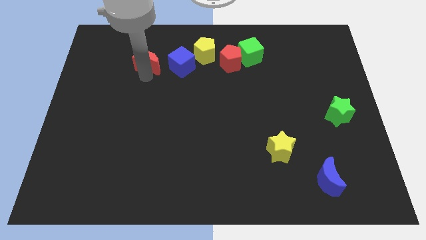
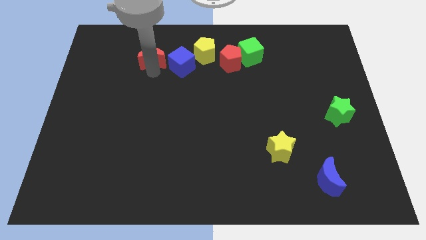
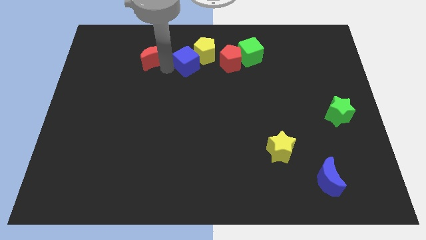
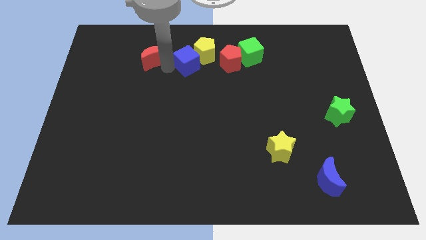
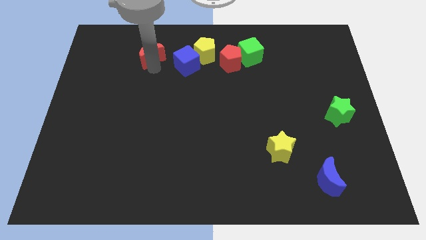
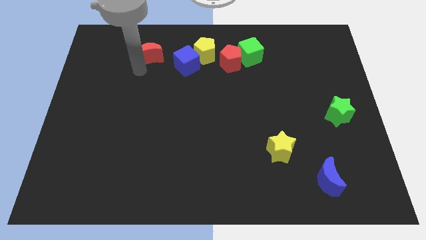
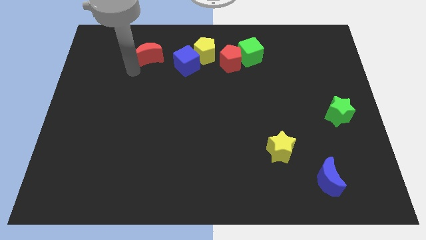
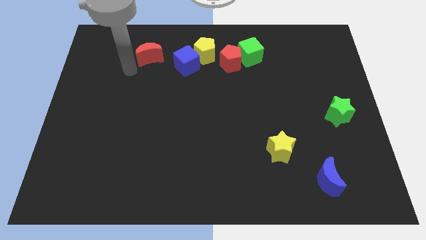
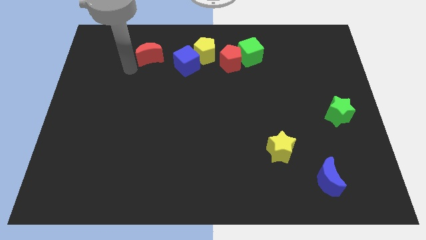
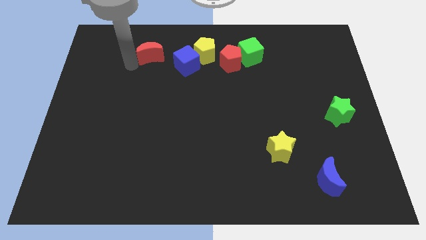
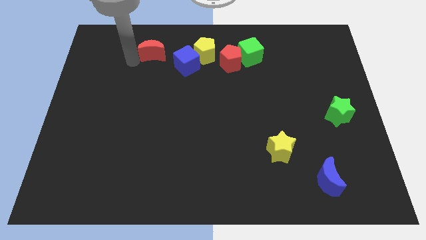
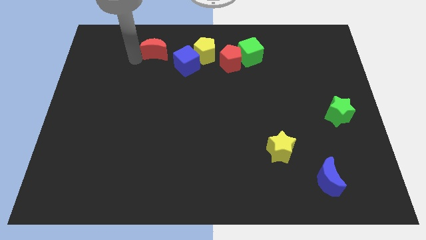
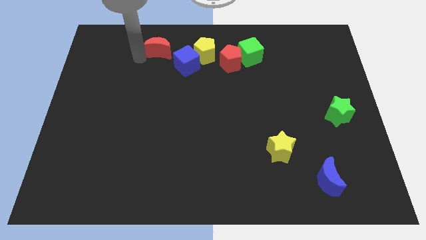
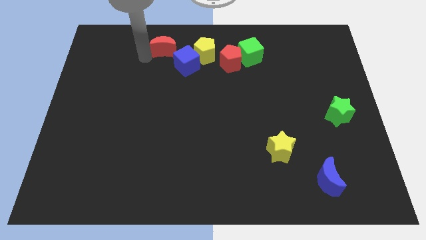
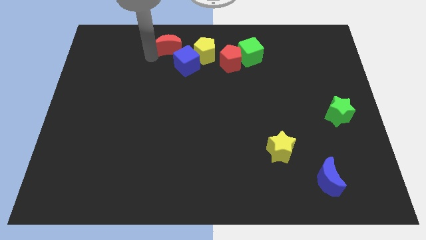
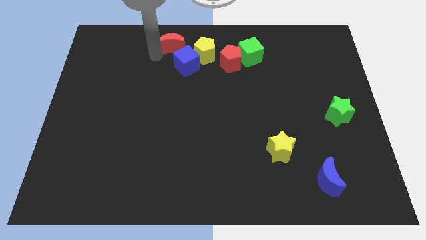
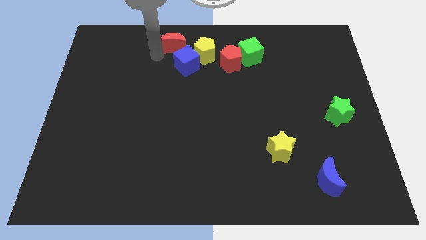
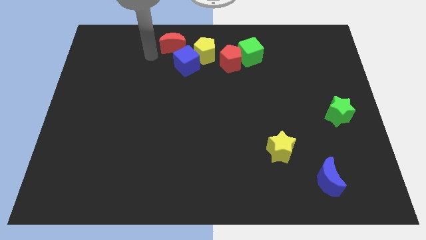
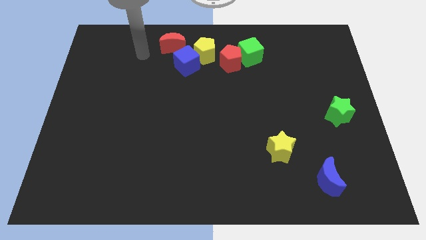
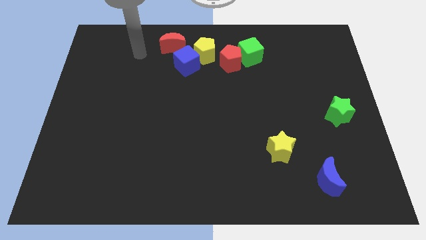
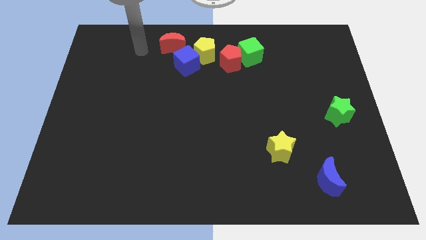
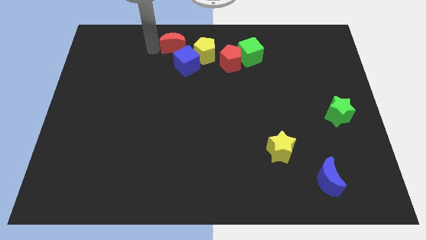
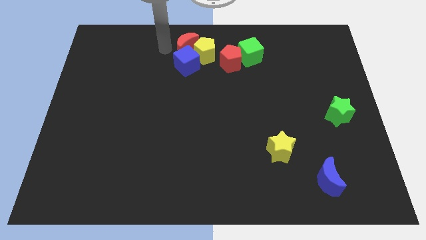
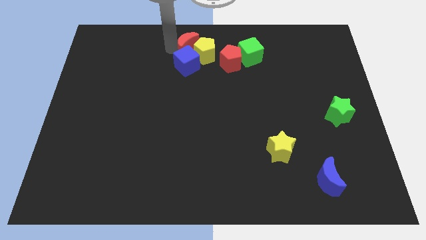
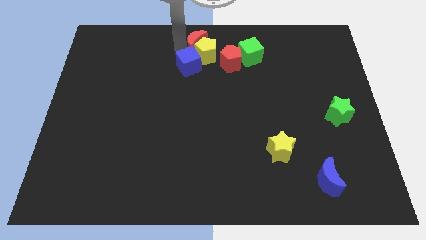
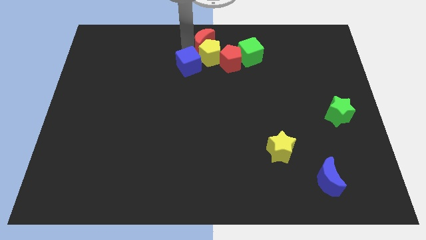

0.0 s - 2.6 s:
push the red crescent to the top of the yellow pentagon

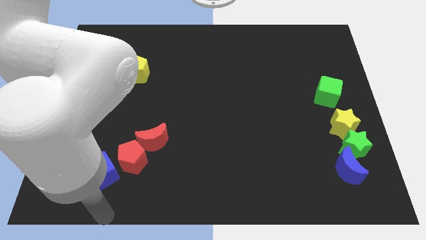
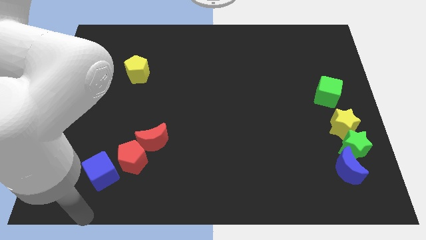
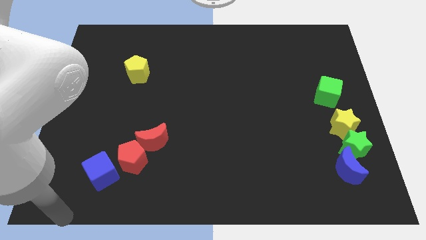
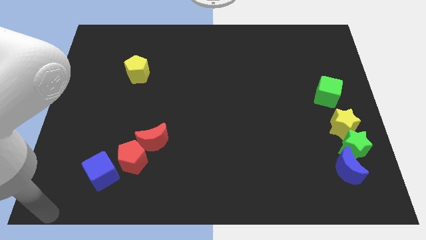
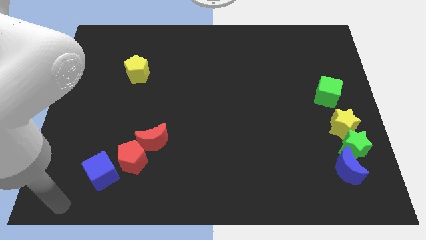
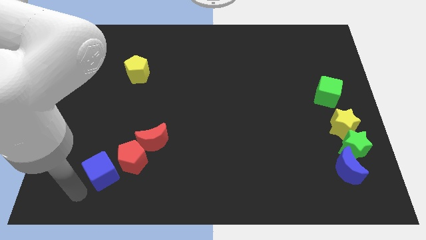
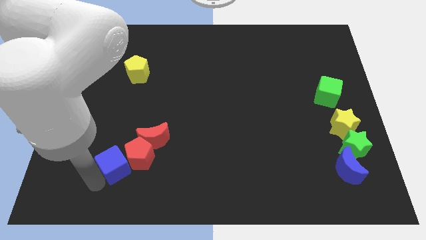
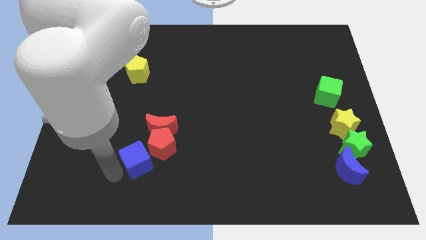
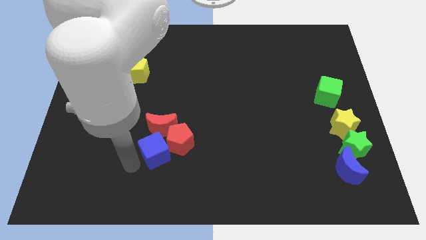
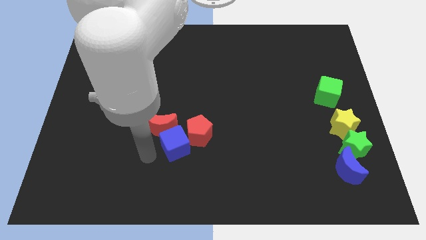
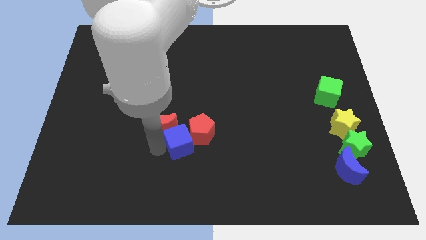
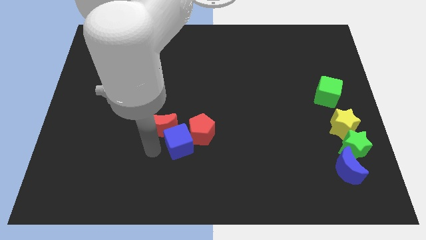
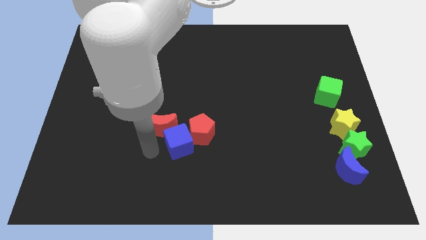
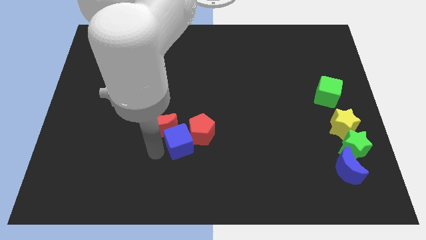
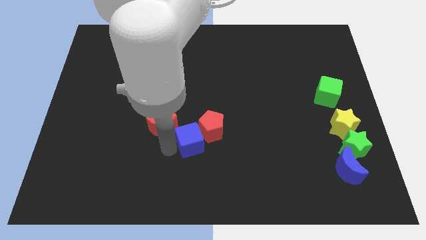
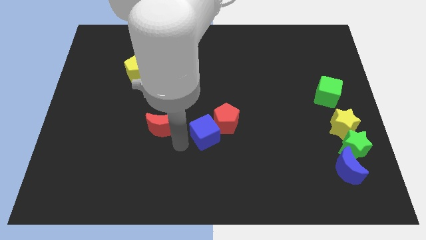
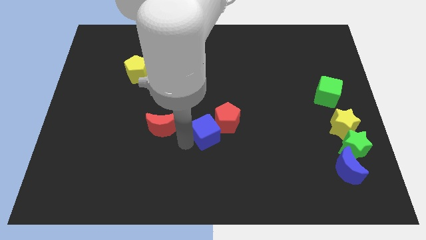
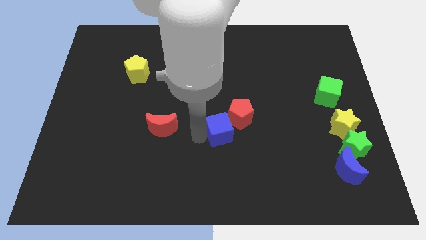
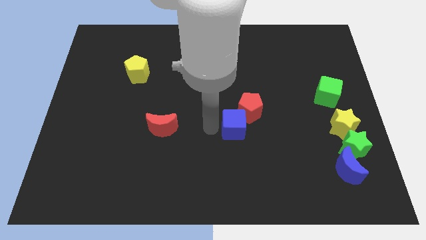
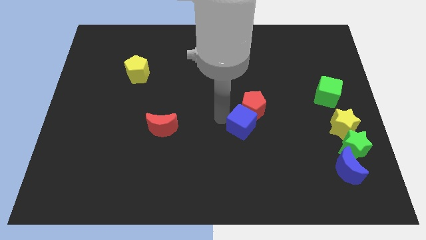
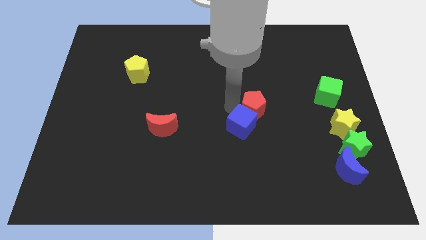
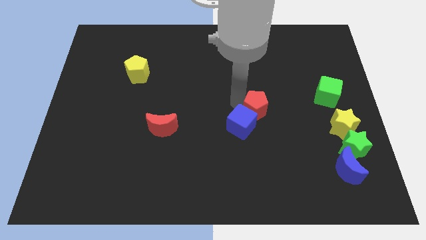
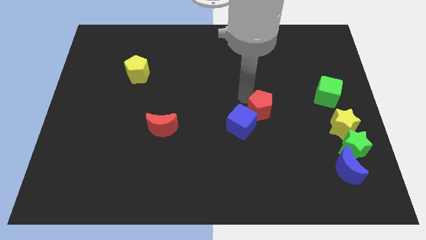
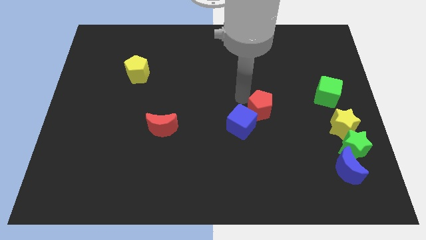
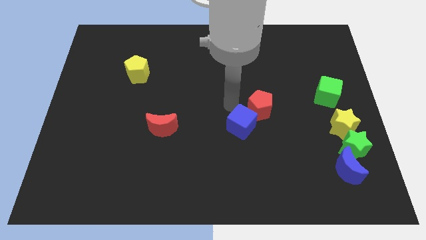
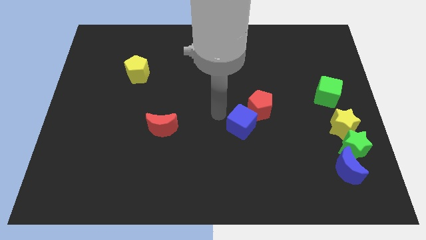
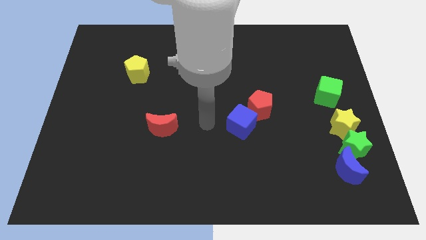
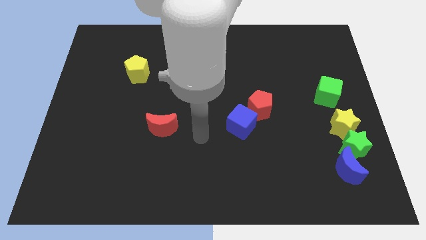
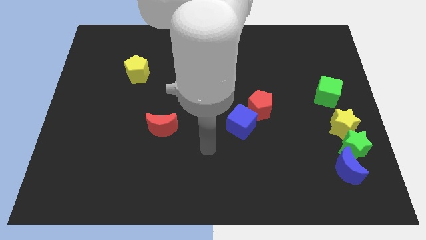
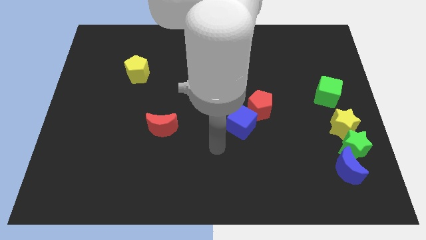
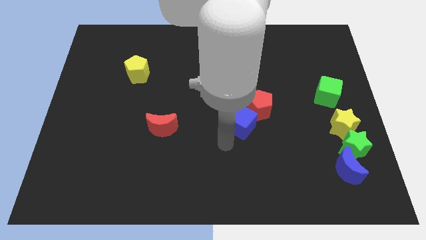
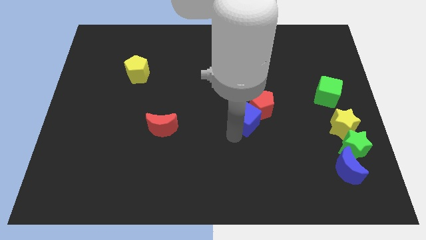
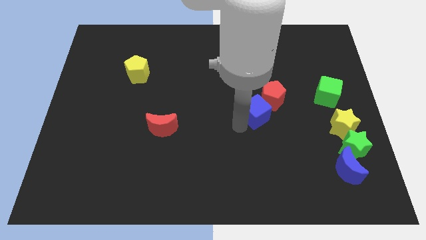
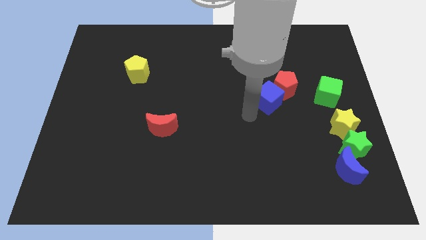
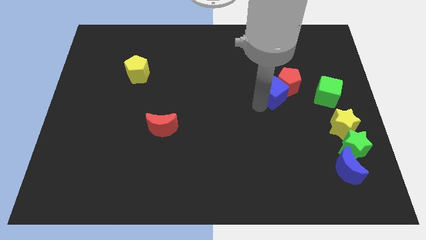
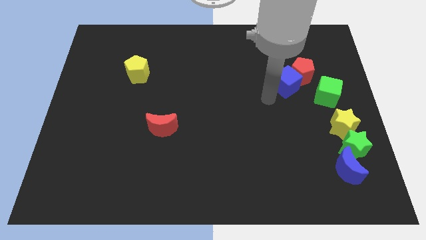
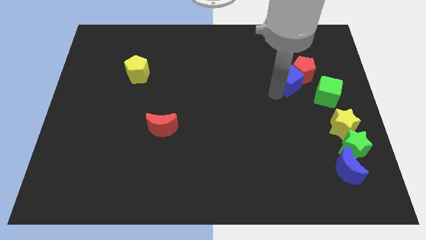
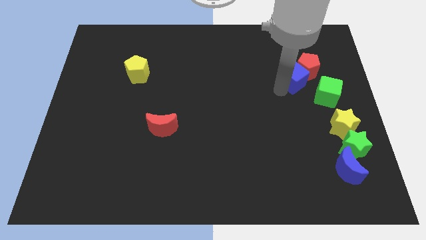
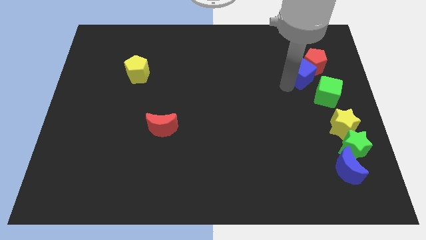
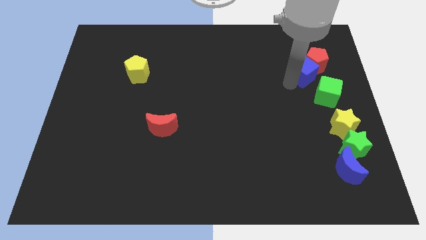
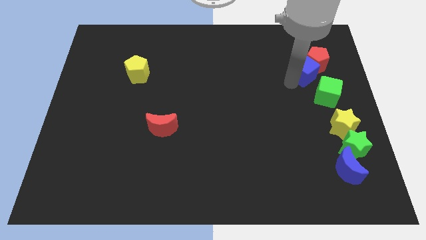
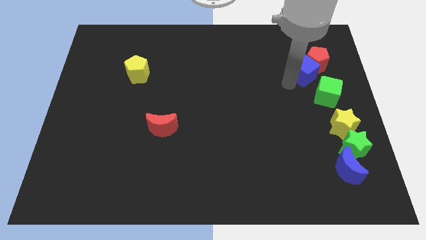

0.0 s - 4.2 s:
push the blue cube into the red pentagon

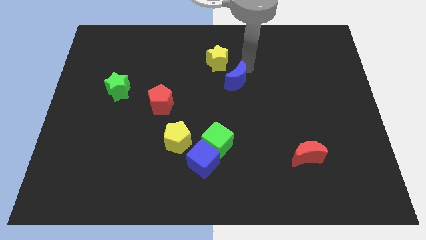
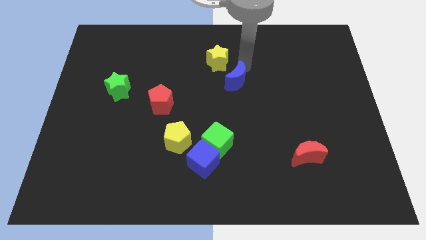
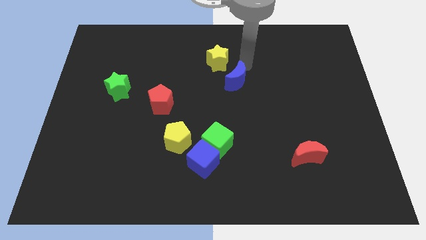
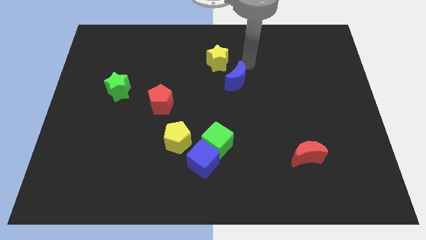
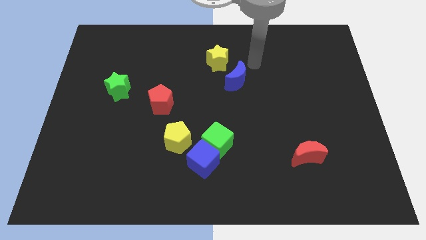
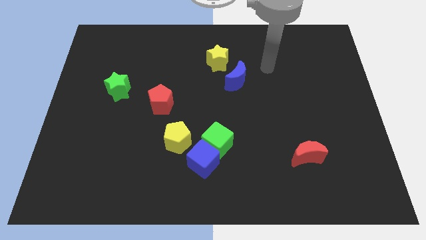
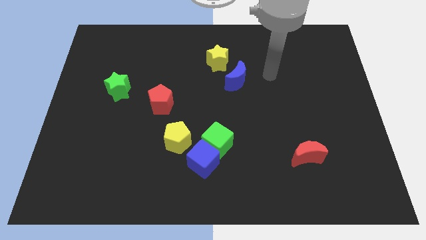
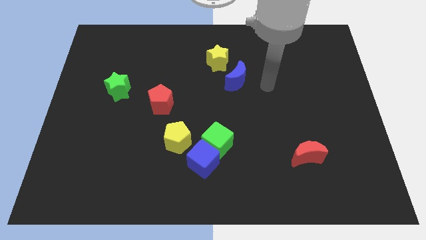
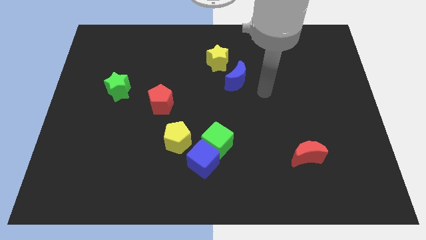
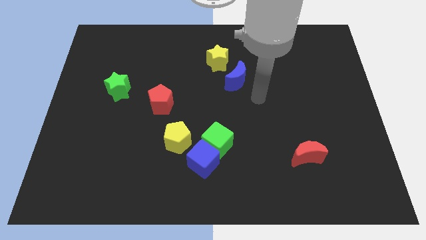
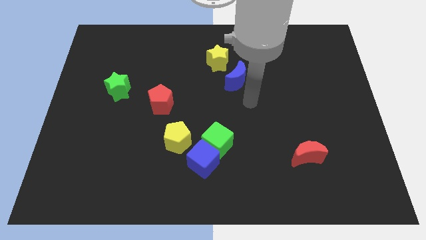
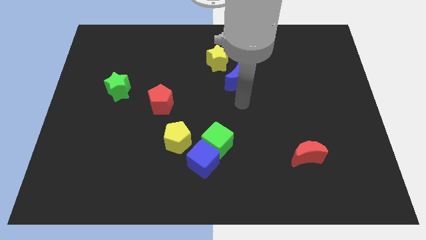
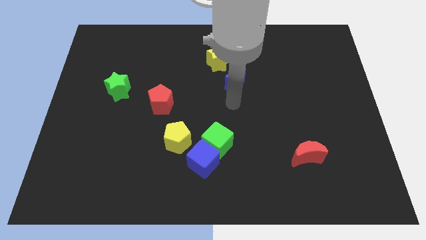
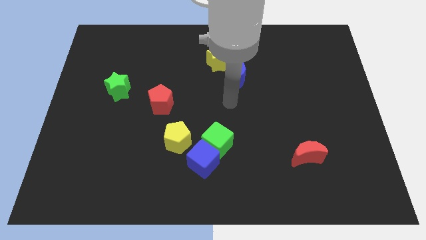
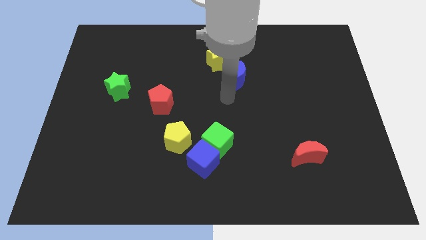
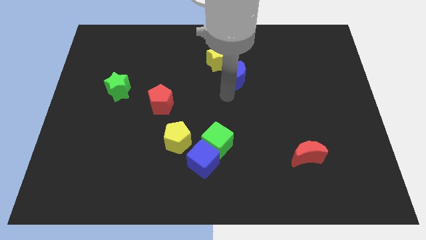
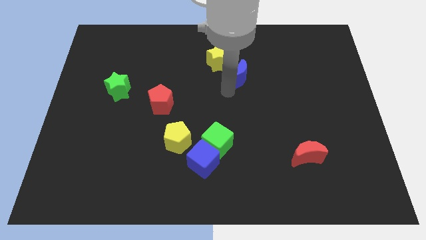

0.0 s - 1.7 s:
move your arm below the blue moon

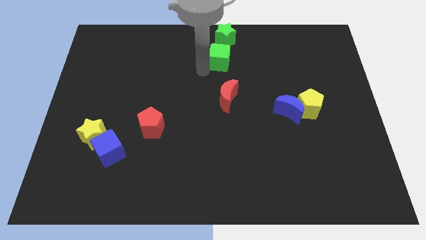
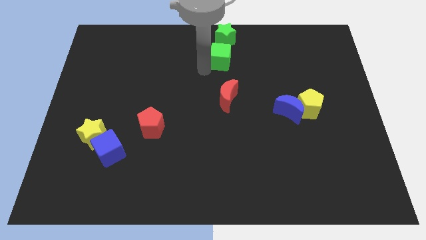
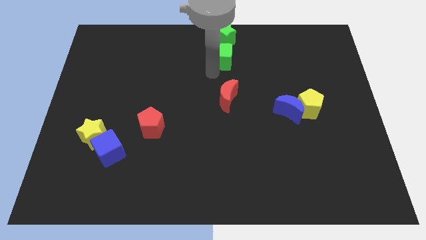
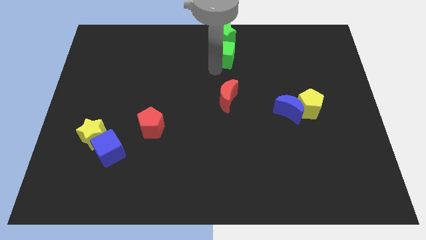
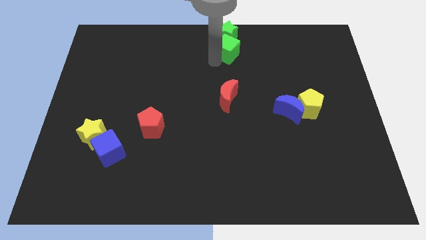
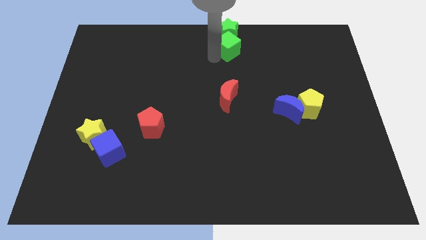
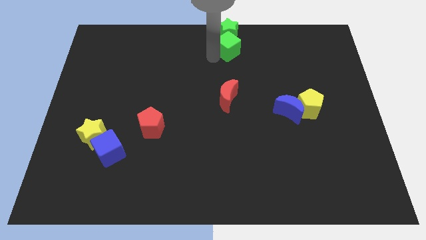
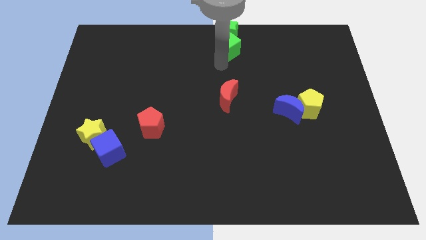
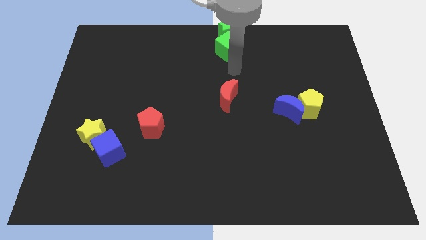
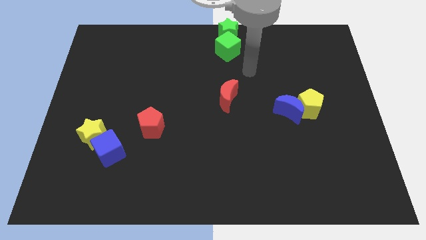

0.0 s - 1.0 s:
push green cube in to green star
